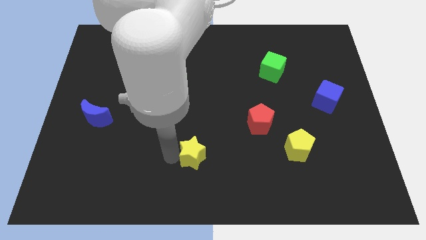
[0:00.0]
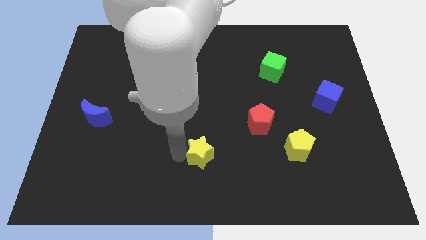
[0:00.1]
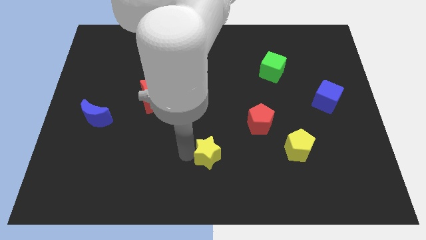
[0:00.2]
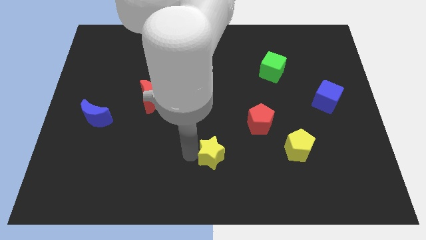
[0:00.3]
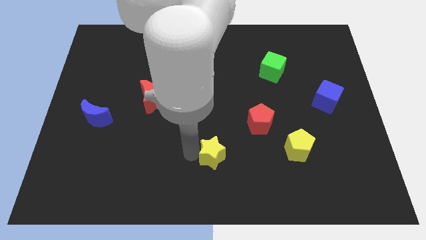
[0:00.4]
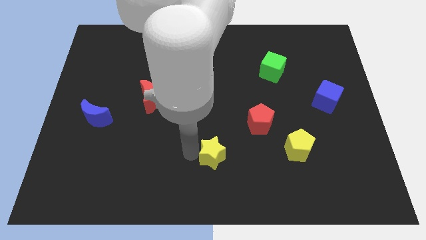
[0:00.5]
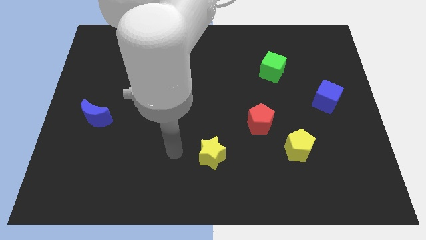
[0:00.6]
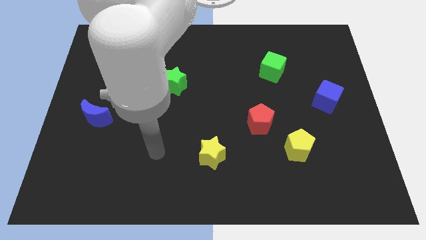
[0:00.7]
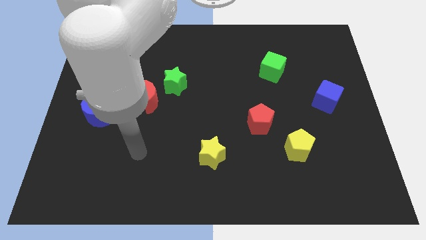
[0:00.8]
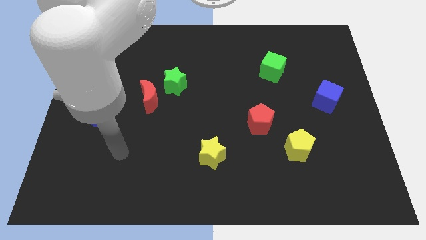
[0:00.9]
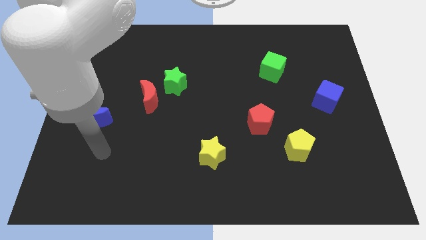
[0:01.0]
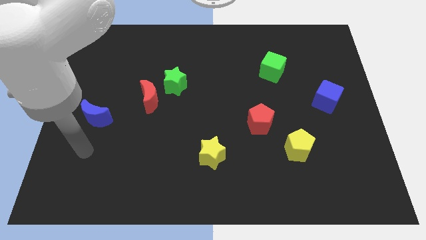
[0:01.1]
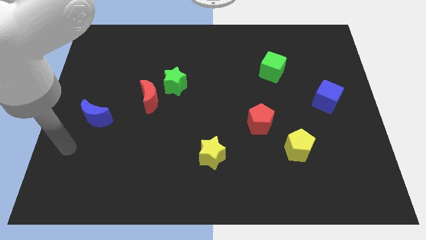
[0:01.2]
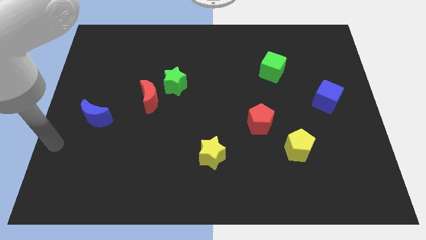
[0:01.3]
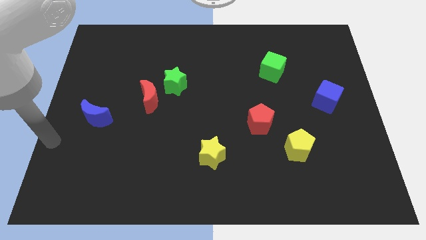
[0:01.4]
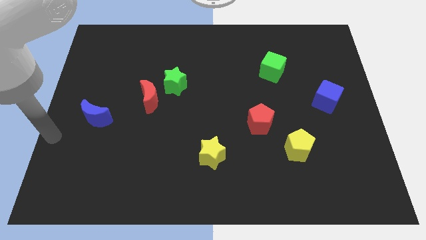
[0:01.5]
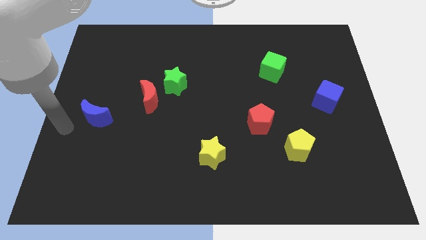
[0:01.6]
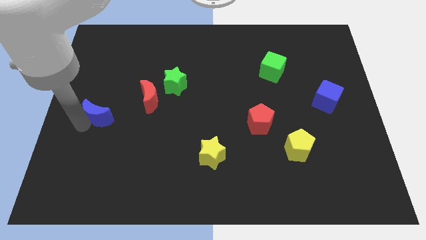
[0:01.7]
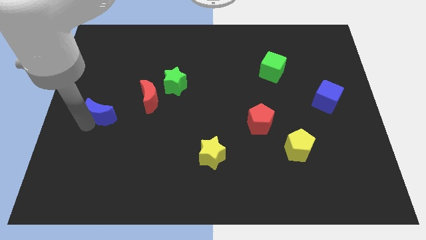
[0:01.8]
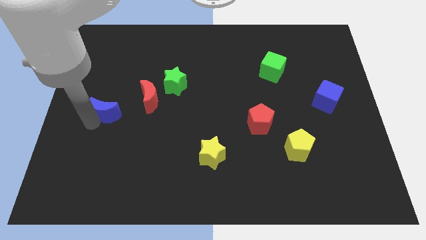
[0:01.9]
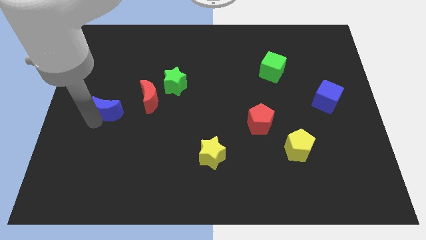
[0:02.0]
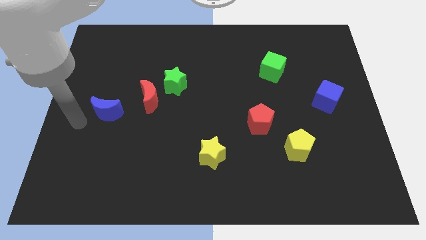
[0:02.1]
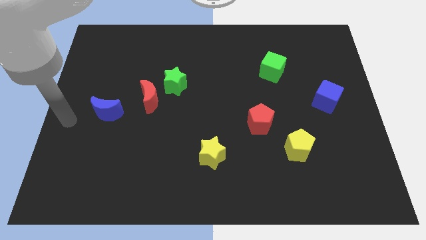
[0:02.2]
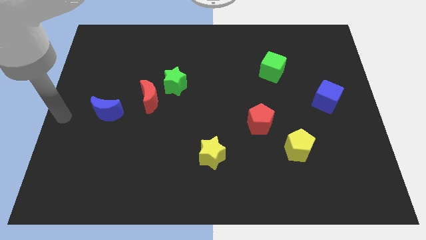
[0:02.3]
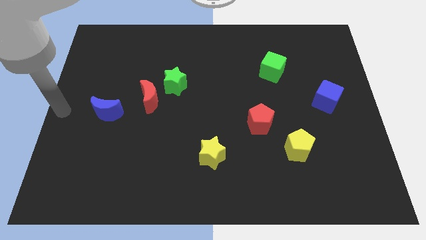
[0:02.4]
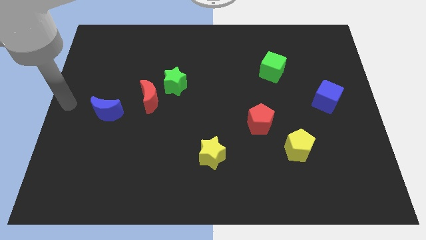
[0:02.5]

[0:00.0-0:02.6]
slightly move the blue moon to the red moon

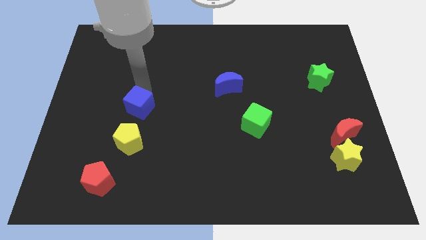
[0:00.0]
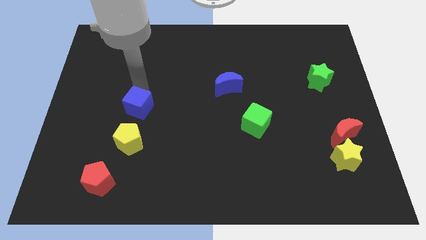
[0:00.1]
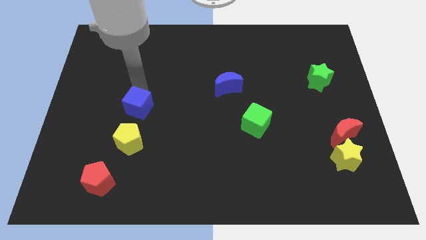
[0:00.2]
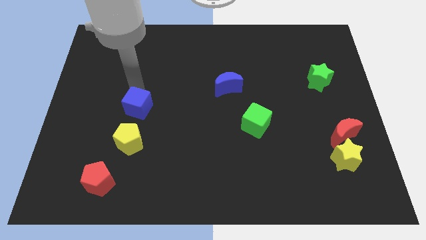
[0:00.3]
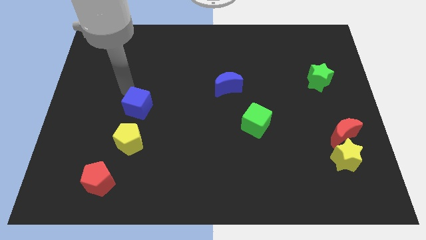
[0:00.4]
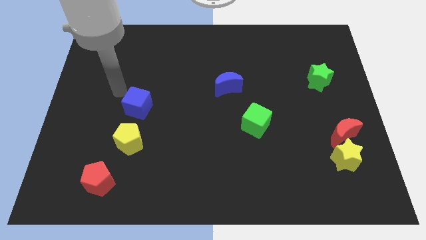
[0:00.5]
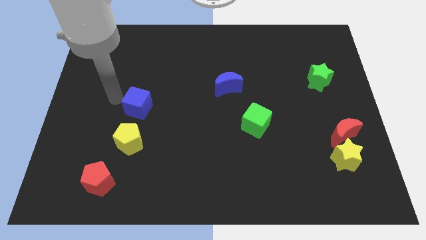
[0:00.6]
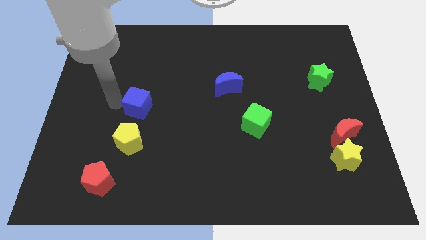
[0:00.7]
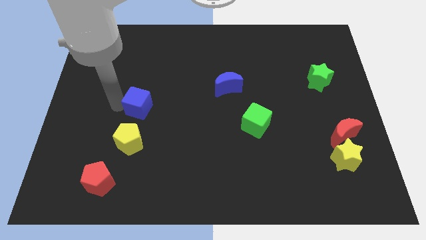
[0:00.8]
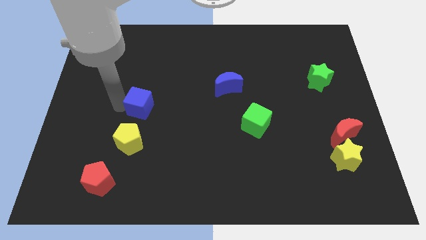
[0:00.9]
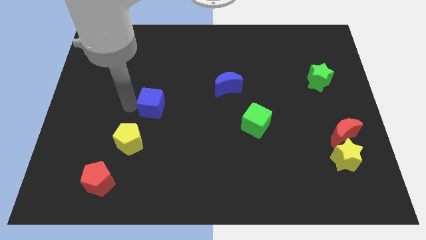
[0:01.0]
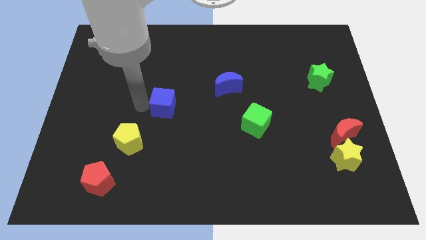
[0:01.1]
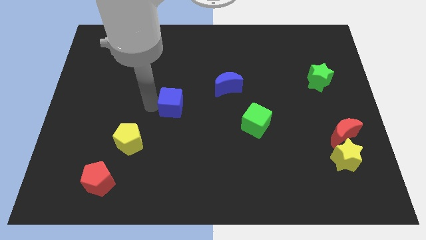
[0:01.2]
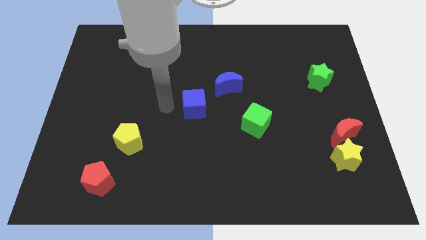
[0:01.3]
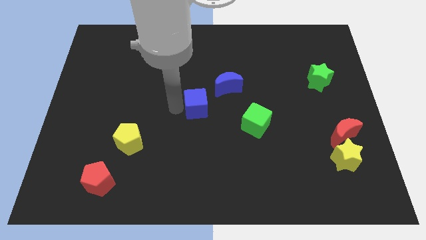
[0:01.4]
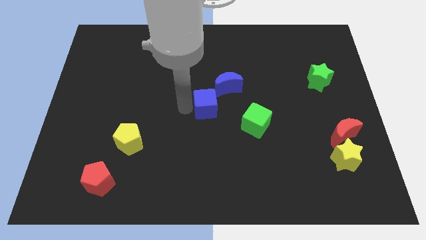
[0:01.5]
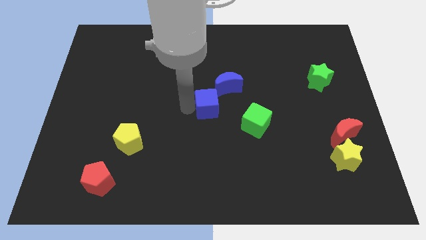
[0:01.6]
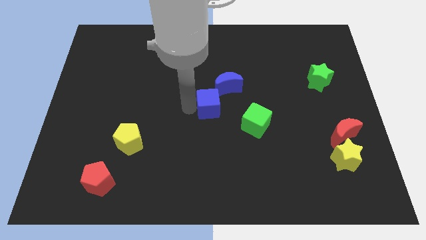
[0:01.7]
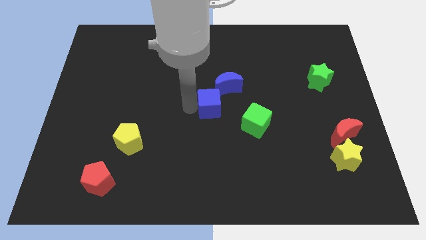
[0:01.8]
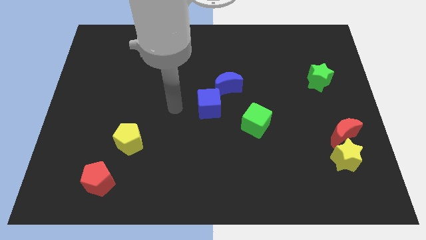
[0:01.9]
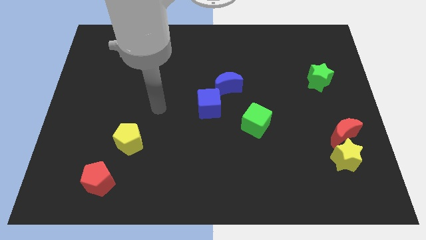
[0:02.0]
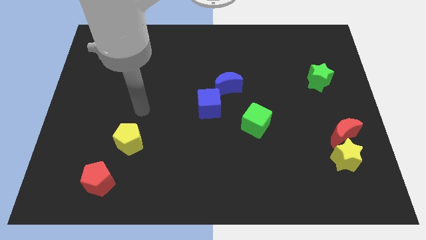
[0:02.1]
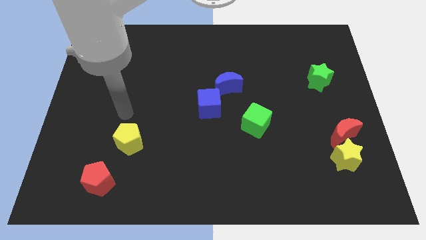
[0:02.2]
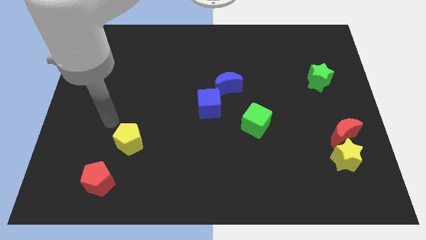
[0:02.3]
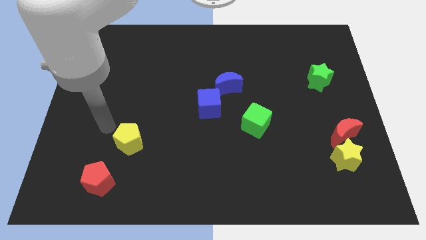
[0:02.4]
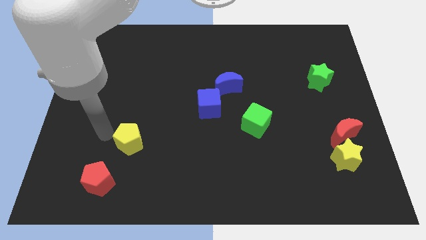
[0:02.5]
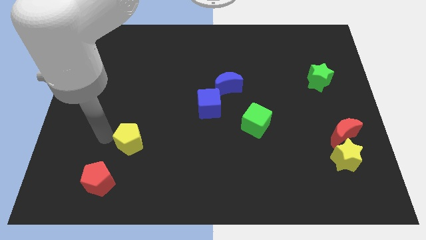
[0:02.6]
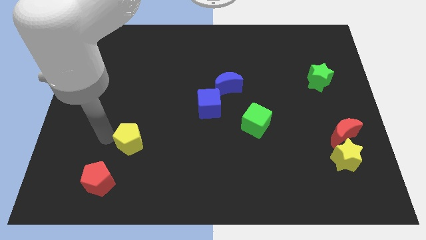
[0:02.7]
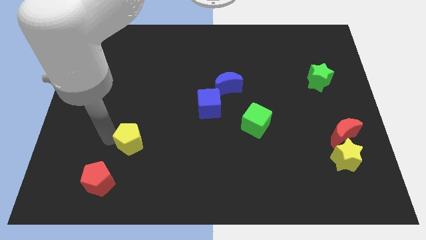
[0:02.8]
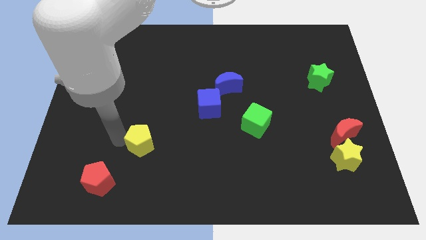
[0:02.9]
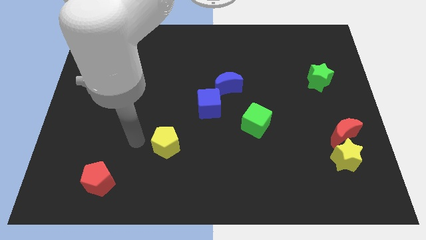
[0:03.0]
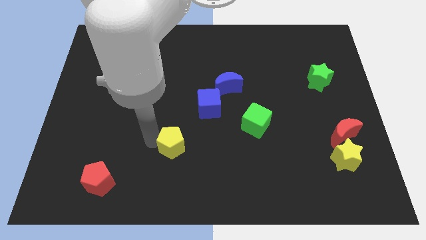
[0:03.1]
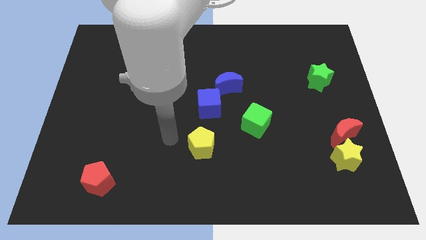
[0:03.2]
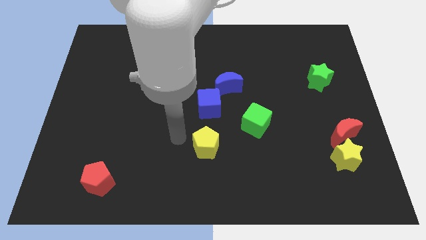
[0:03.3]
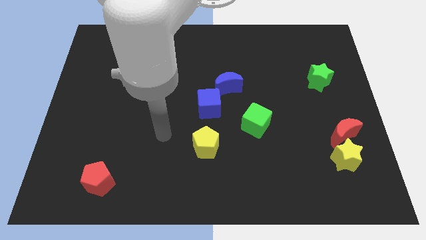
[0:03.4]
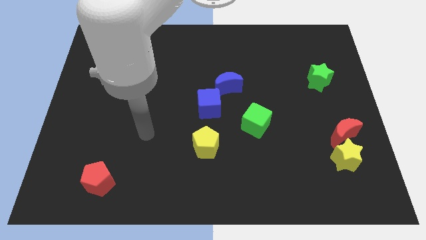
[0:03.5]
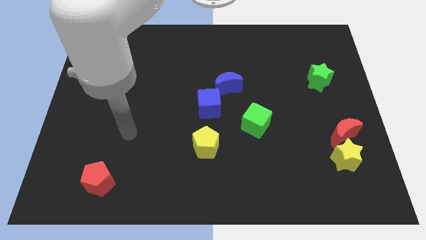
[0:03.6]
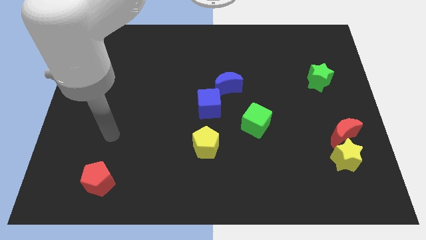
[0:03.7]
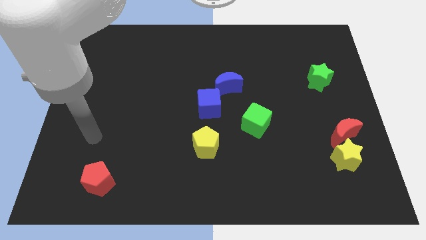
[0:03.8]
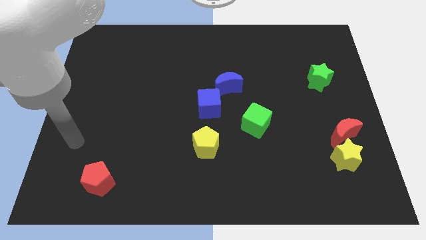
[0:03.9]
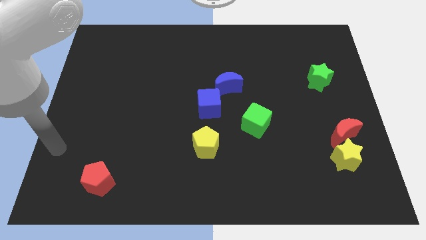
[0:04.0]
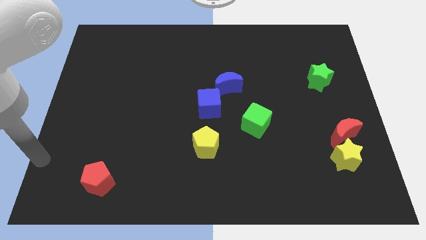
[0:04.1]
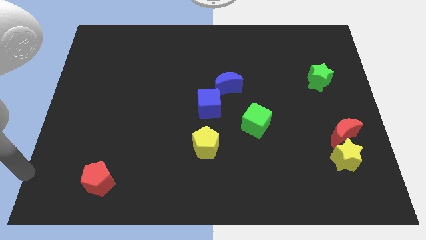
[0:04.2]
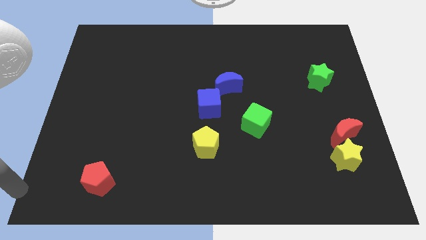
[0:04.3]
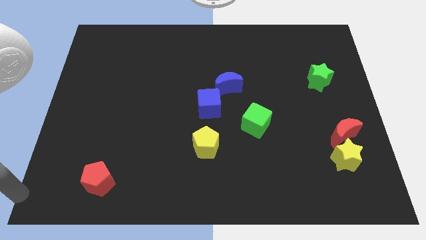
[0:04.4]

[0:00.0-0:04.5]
form a vertical line at the center with blue cube and a yellow pentagon

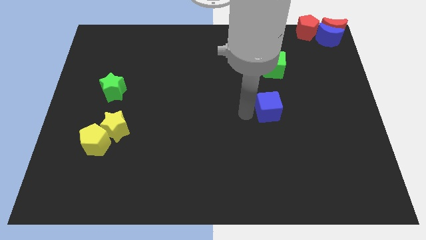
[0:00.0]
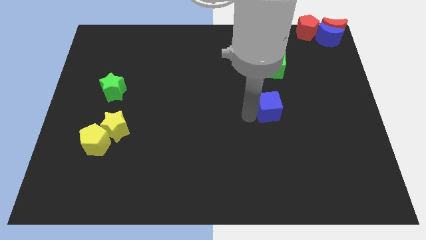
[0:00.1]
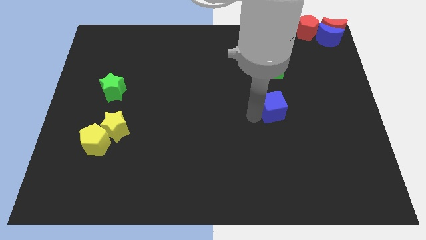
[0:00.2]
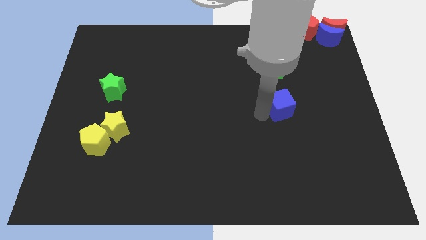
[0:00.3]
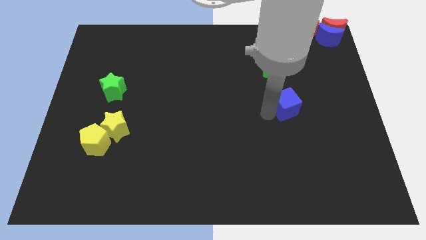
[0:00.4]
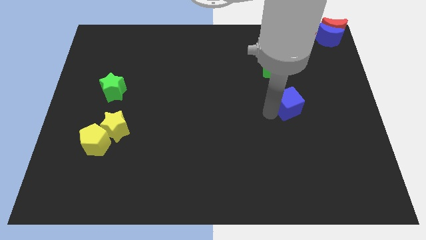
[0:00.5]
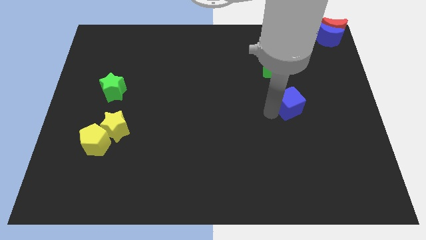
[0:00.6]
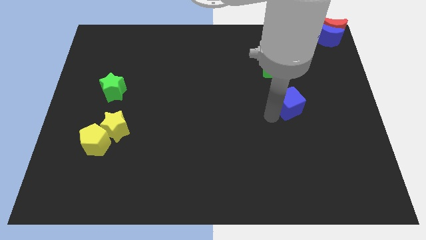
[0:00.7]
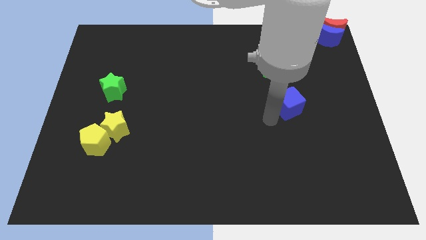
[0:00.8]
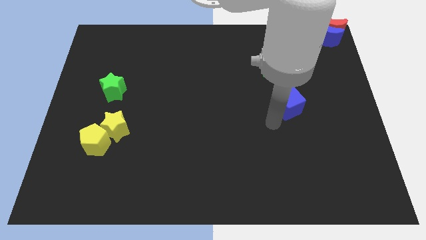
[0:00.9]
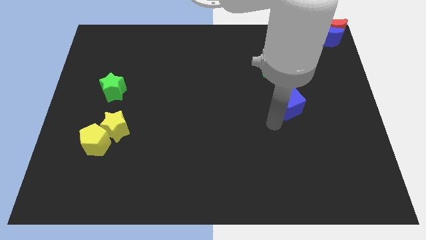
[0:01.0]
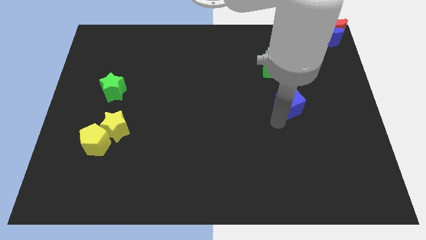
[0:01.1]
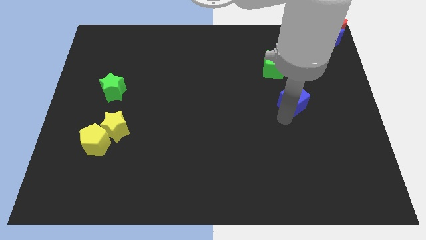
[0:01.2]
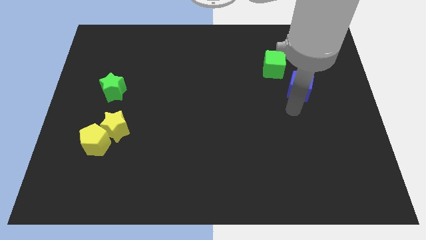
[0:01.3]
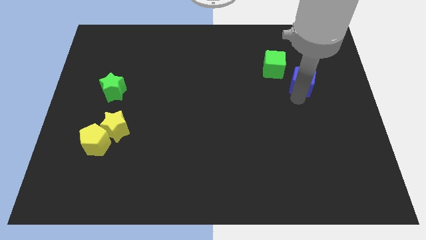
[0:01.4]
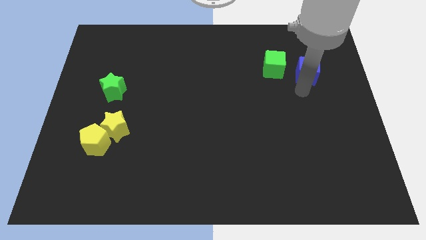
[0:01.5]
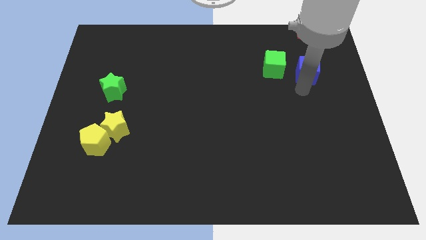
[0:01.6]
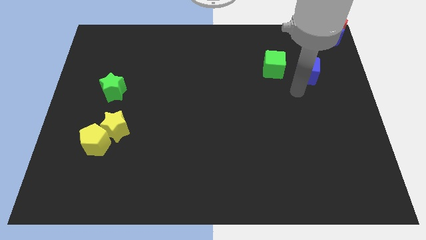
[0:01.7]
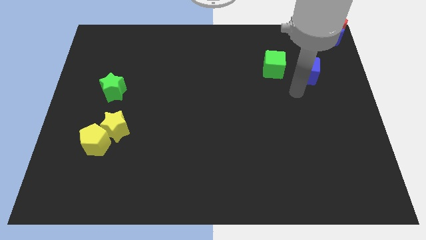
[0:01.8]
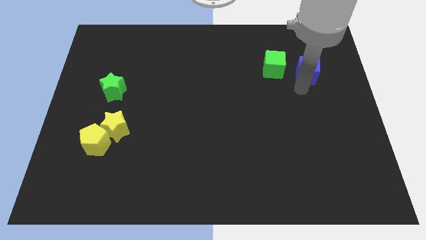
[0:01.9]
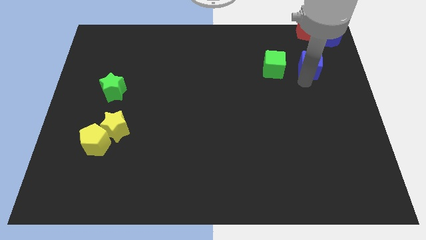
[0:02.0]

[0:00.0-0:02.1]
push the blue cube right to the green cube
